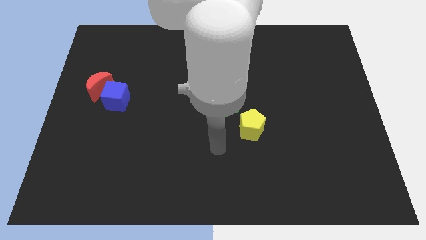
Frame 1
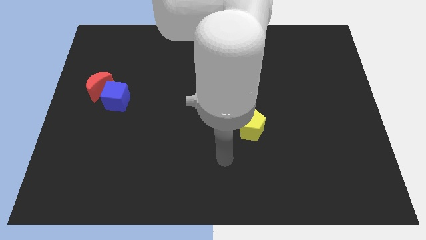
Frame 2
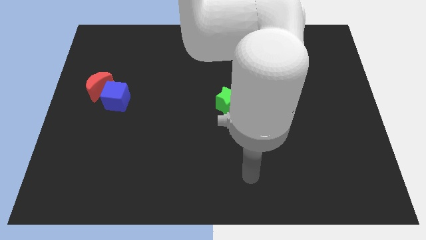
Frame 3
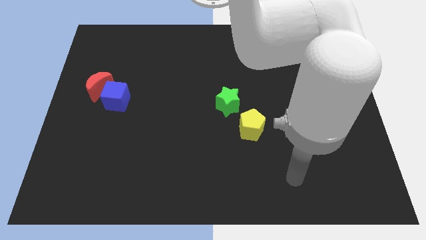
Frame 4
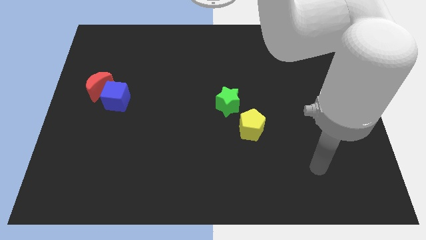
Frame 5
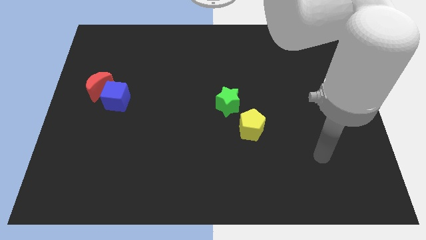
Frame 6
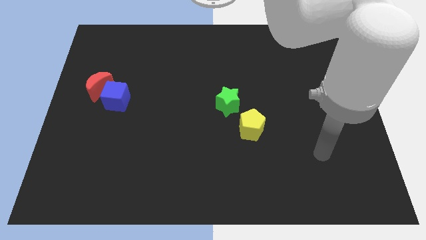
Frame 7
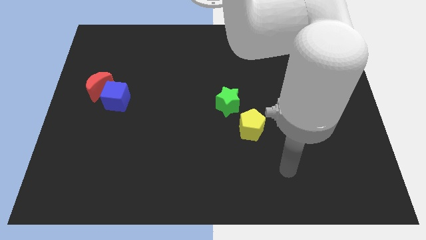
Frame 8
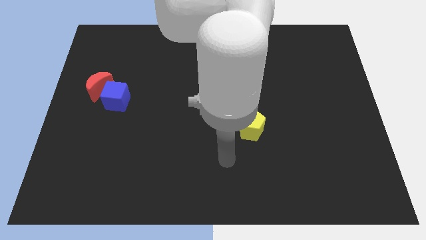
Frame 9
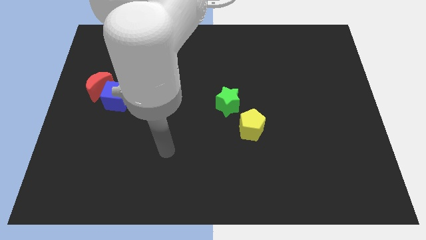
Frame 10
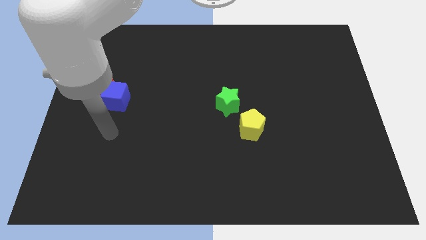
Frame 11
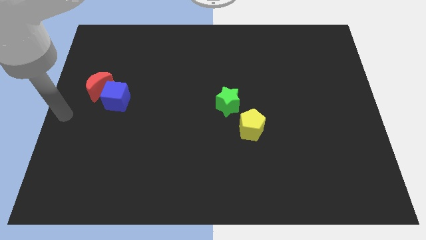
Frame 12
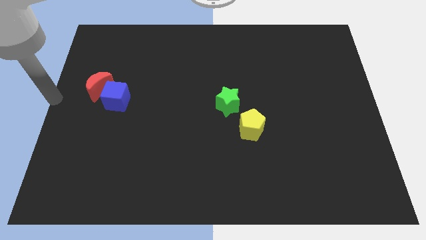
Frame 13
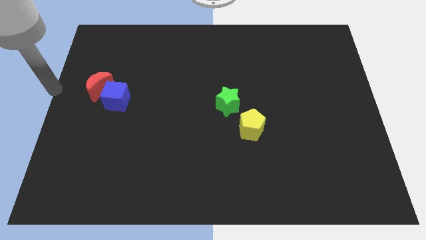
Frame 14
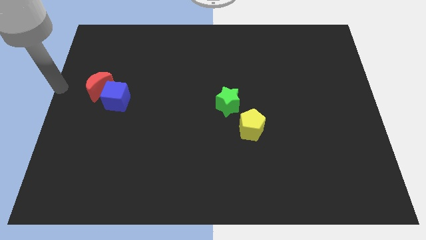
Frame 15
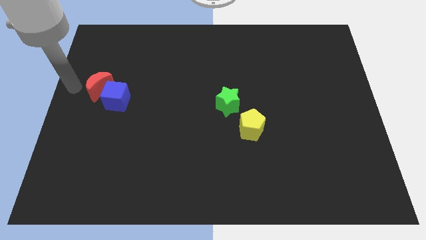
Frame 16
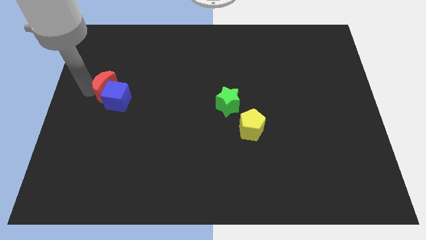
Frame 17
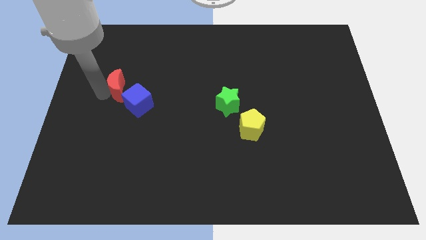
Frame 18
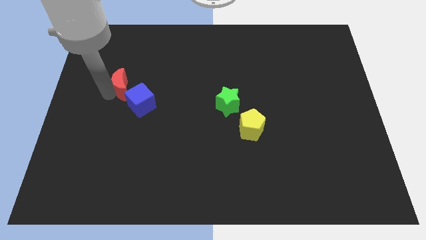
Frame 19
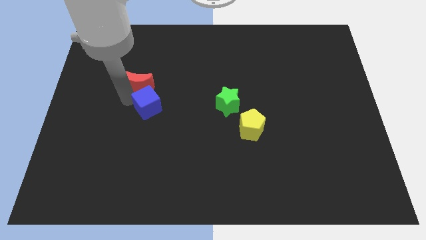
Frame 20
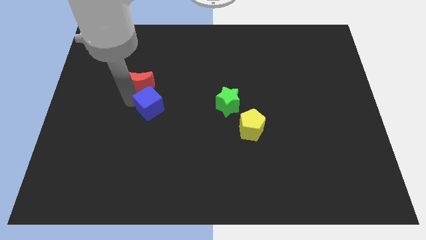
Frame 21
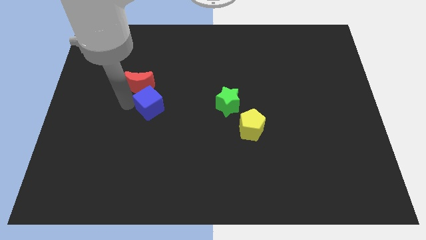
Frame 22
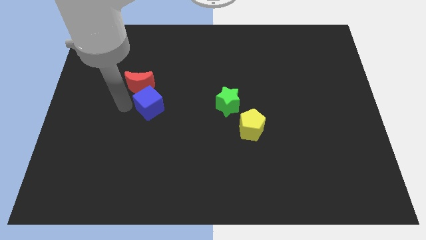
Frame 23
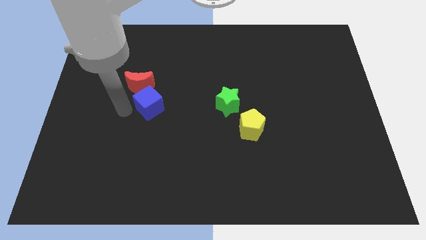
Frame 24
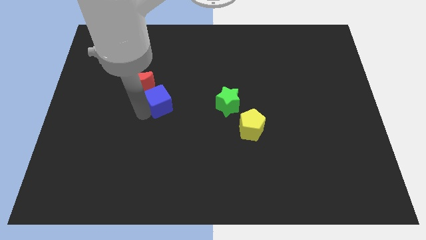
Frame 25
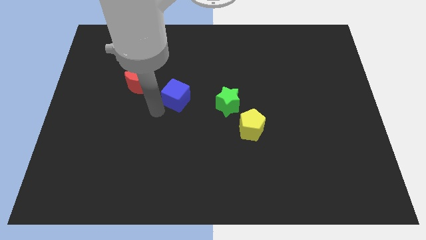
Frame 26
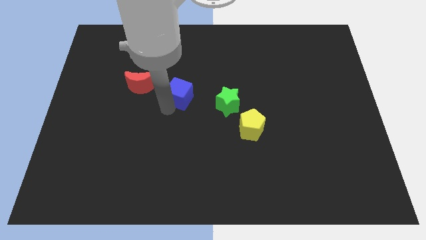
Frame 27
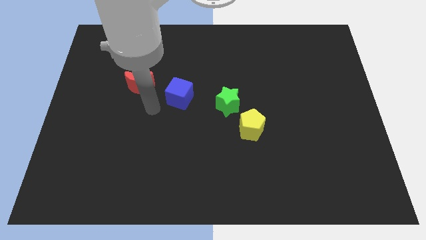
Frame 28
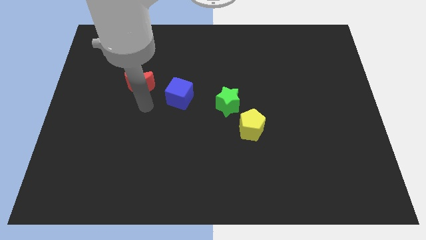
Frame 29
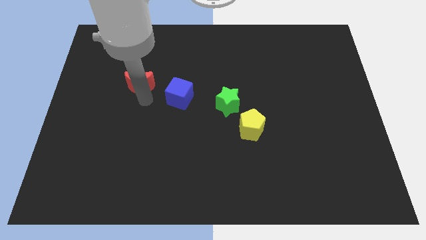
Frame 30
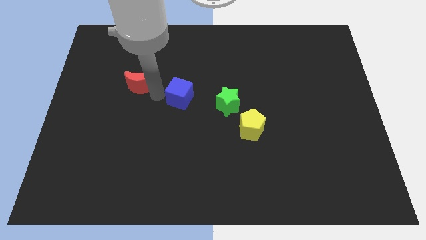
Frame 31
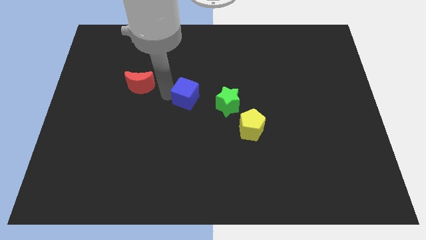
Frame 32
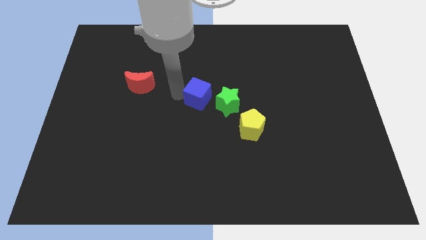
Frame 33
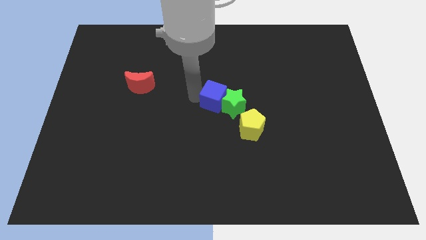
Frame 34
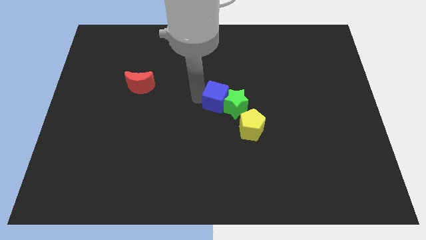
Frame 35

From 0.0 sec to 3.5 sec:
push the cube to the green block

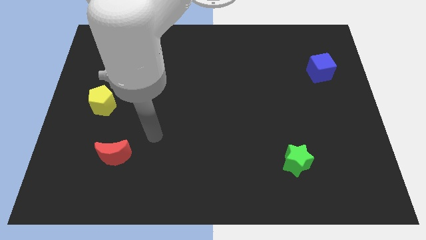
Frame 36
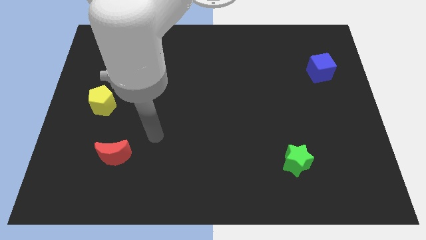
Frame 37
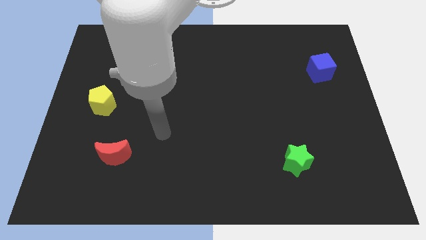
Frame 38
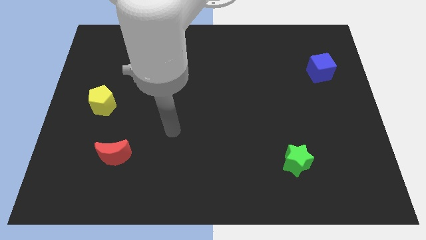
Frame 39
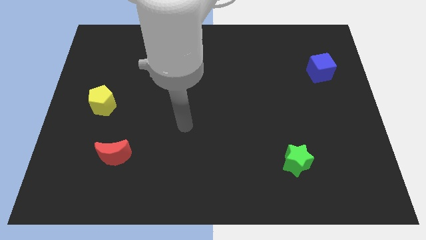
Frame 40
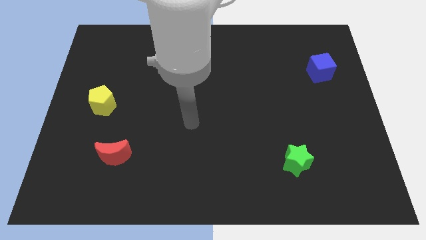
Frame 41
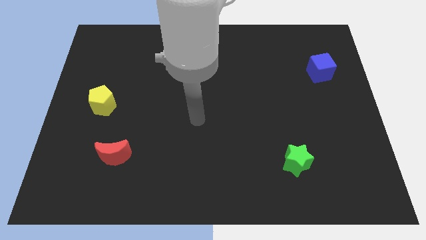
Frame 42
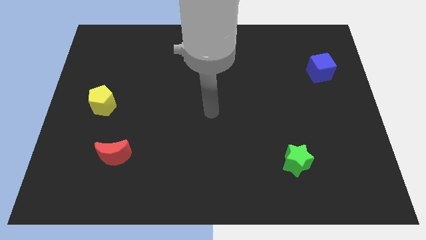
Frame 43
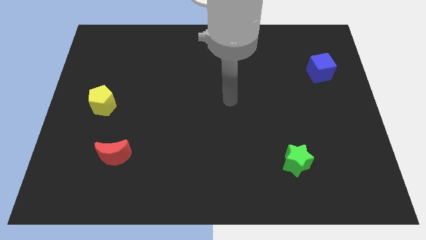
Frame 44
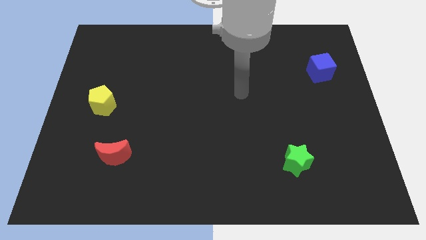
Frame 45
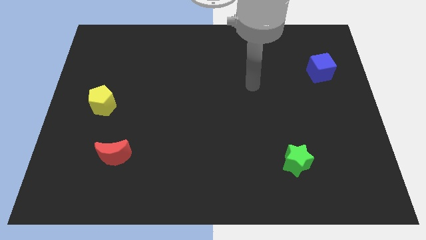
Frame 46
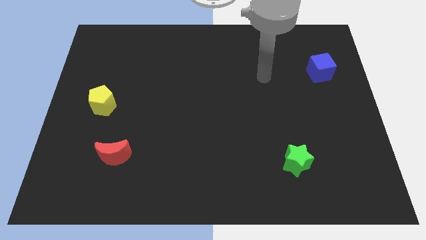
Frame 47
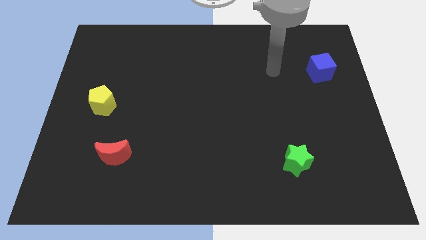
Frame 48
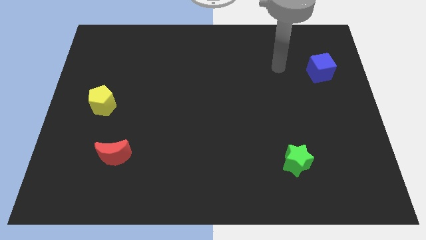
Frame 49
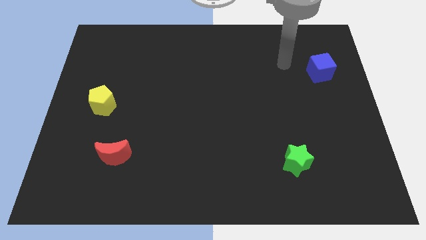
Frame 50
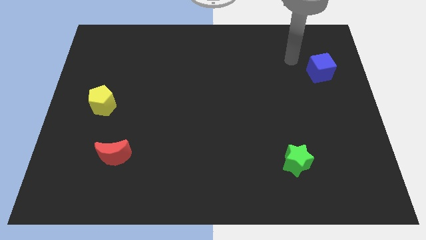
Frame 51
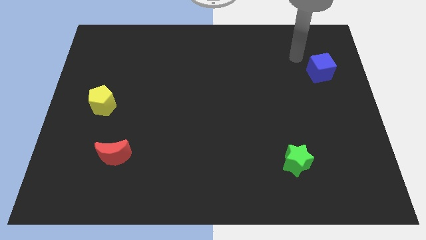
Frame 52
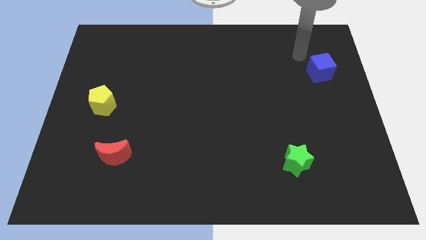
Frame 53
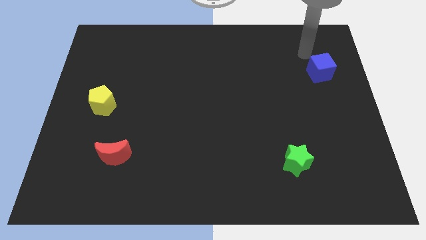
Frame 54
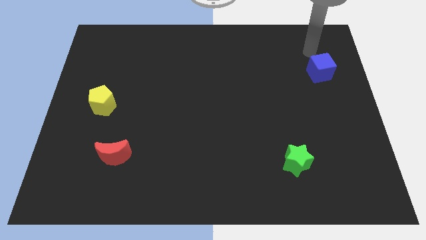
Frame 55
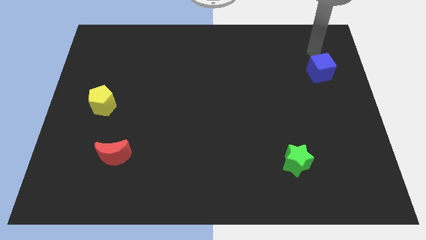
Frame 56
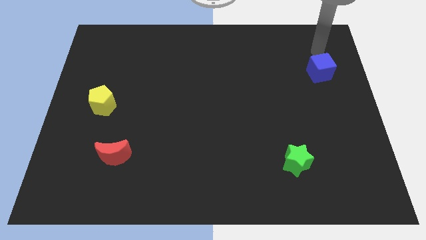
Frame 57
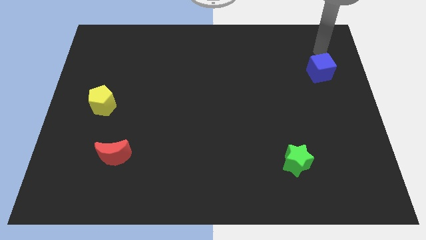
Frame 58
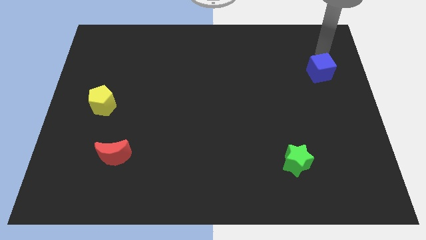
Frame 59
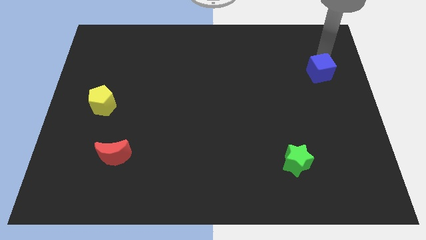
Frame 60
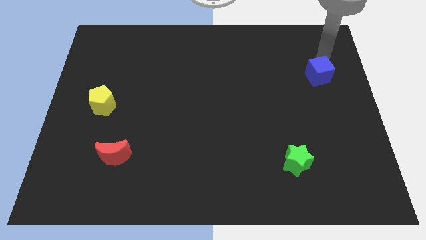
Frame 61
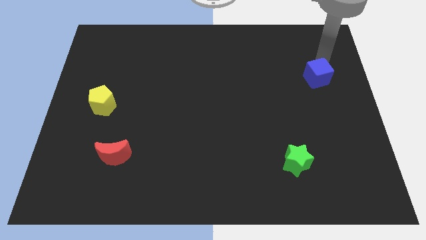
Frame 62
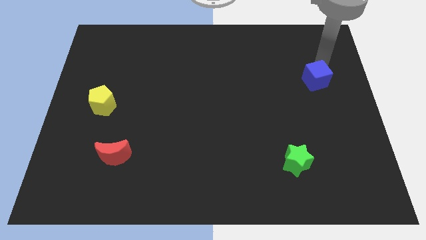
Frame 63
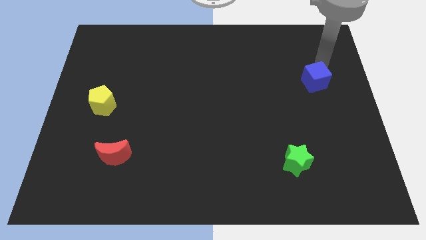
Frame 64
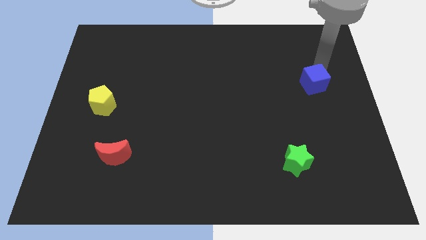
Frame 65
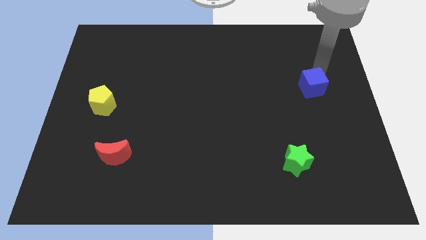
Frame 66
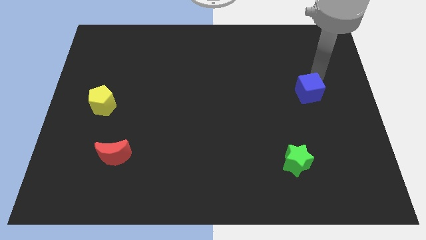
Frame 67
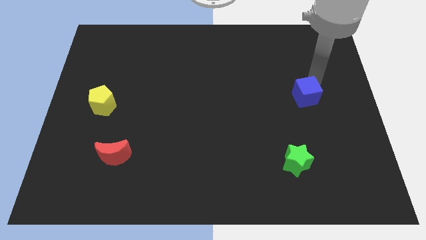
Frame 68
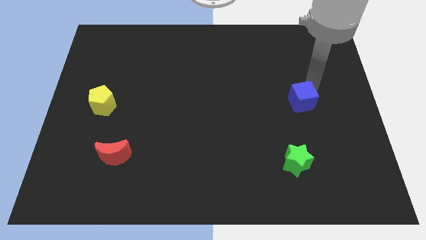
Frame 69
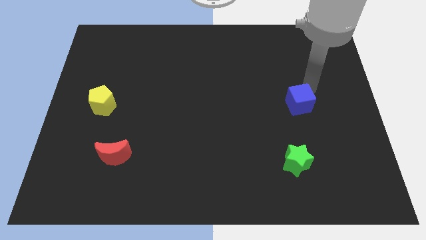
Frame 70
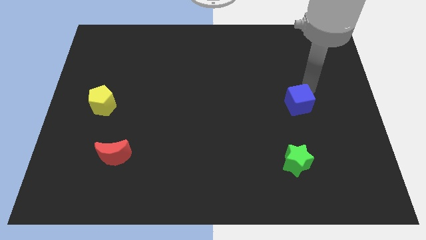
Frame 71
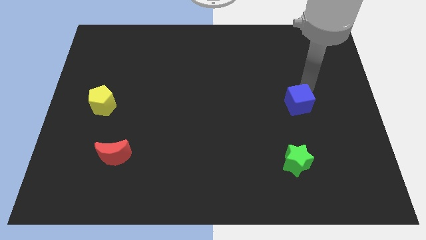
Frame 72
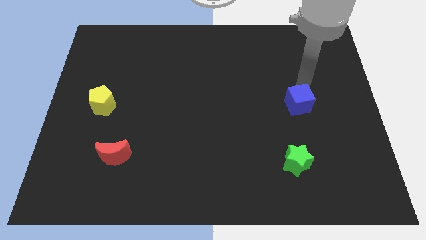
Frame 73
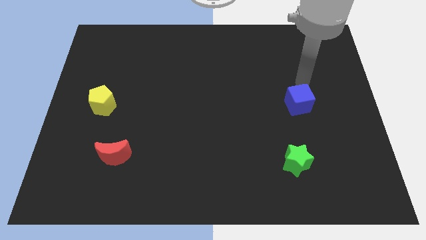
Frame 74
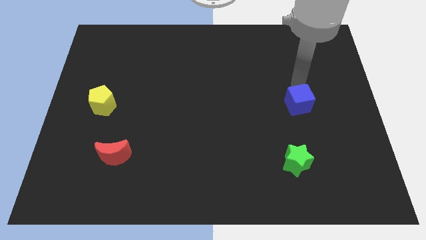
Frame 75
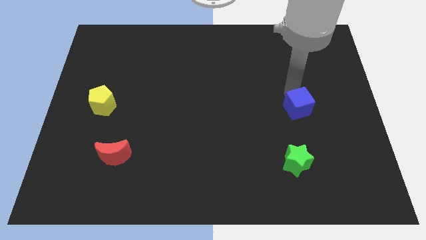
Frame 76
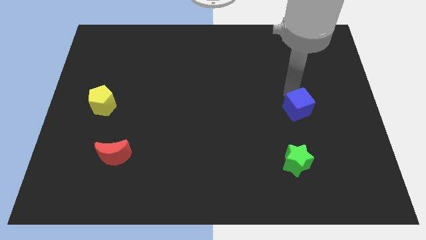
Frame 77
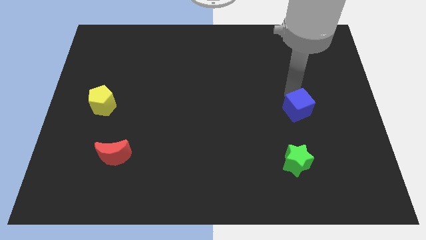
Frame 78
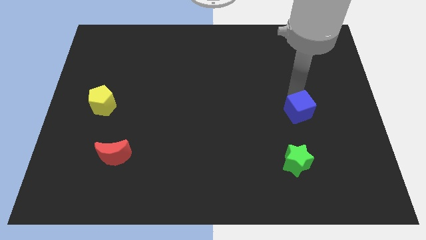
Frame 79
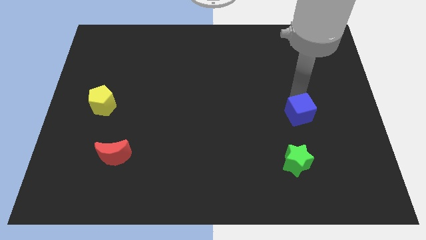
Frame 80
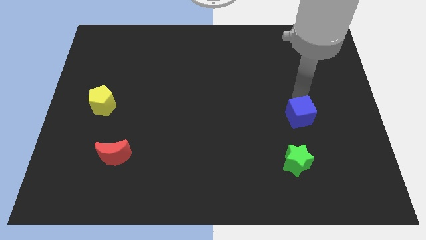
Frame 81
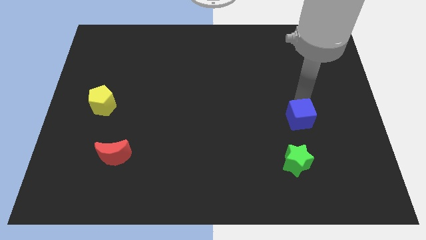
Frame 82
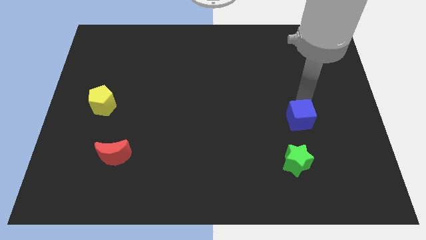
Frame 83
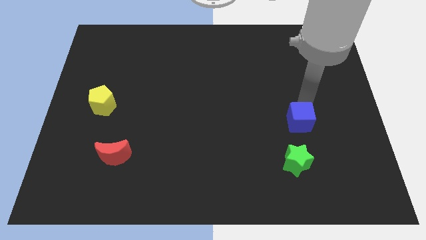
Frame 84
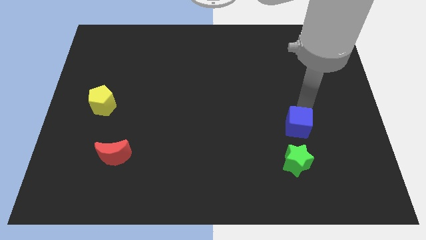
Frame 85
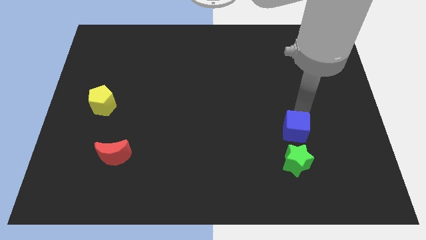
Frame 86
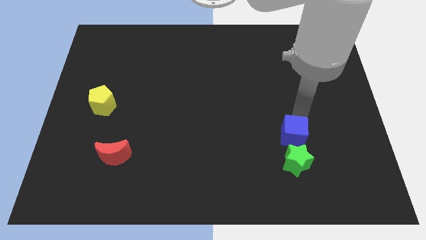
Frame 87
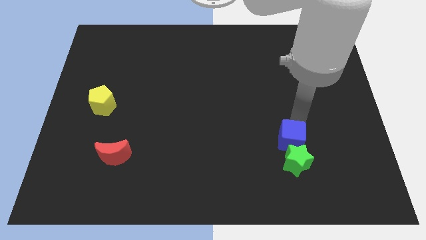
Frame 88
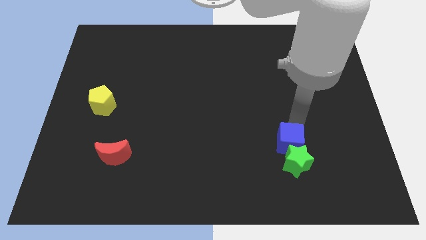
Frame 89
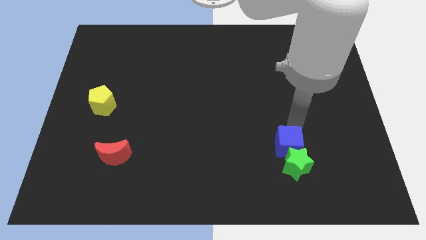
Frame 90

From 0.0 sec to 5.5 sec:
slide the cube to the star
